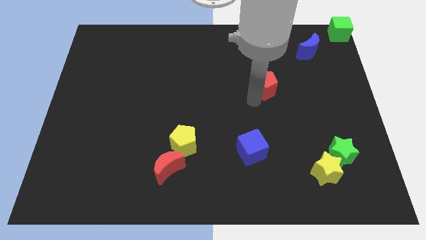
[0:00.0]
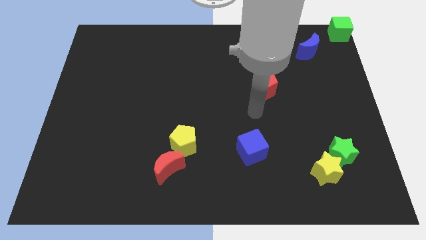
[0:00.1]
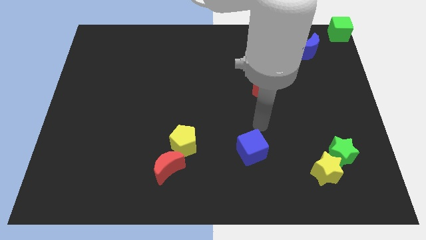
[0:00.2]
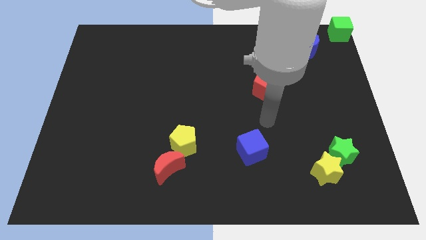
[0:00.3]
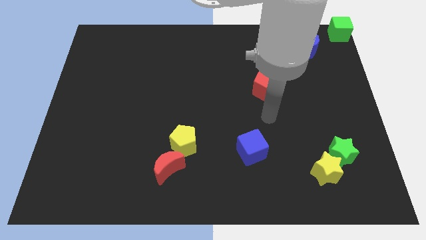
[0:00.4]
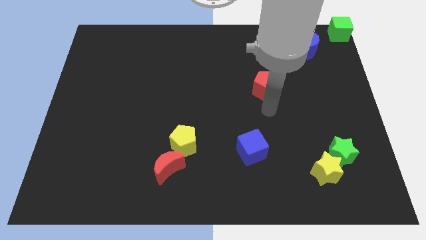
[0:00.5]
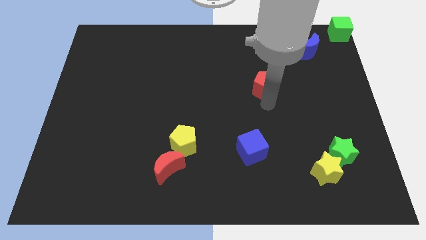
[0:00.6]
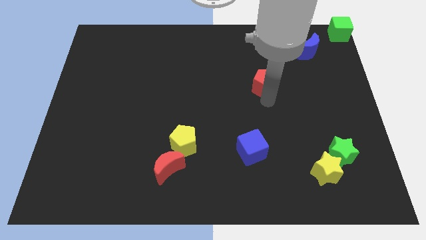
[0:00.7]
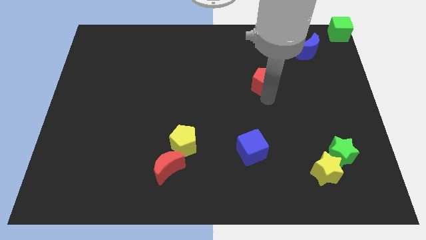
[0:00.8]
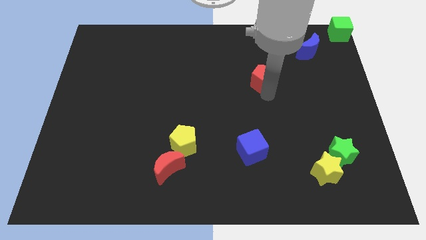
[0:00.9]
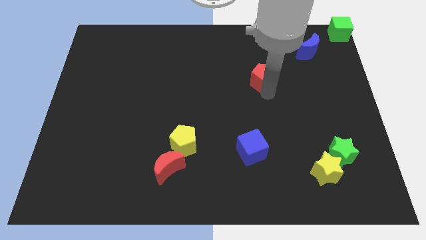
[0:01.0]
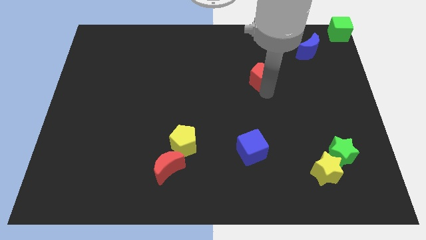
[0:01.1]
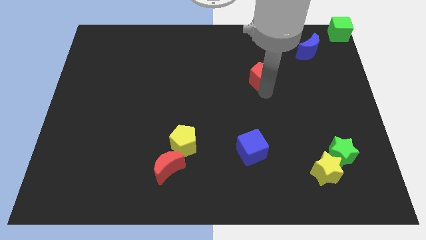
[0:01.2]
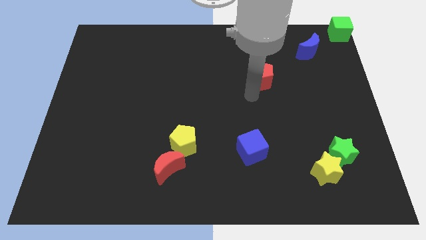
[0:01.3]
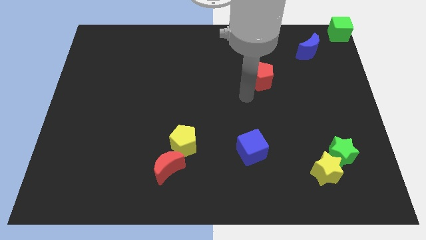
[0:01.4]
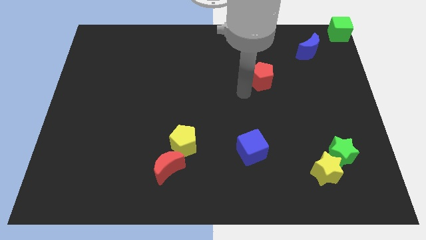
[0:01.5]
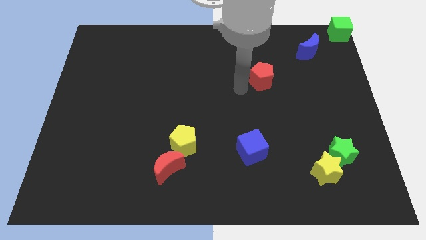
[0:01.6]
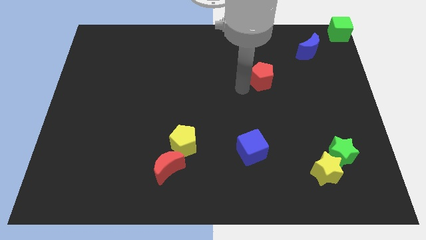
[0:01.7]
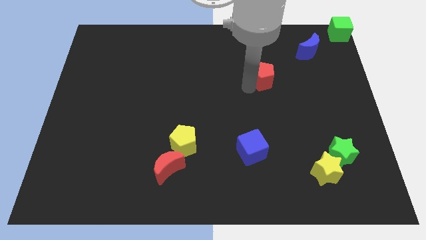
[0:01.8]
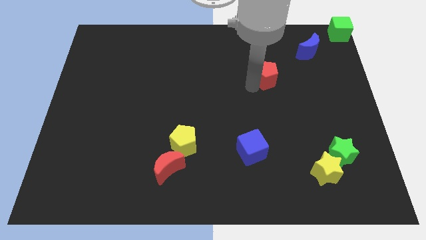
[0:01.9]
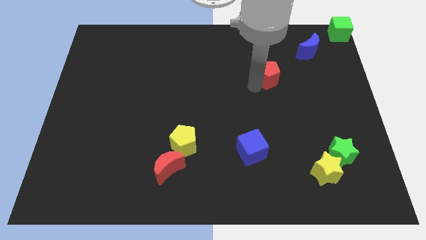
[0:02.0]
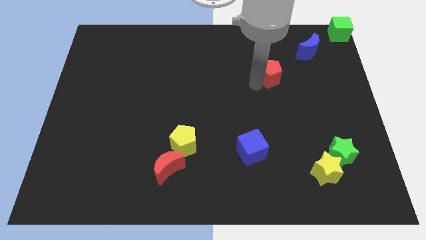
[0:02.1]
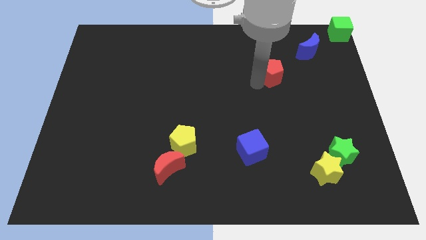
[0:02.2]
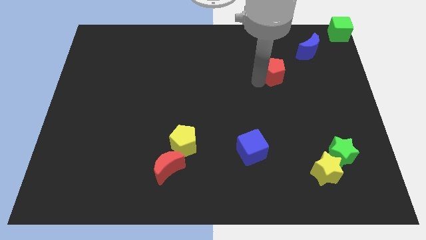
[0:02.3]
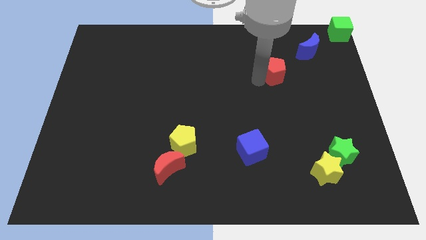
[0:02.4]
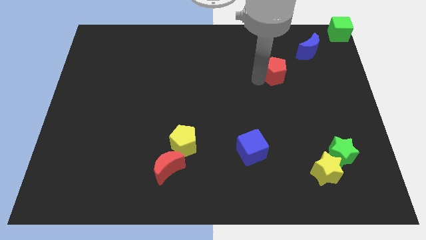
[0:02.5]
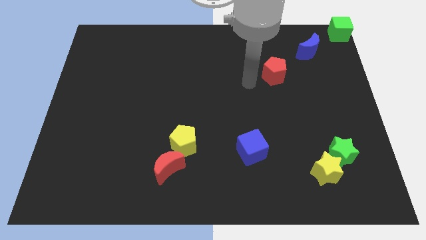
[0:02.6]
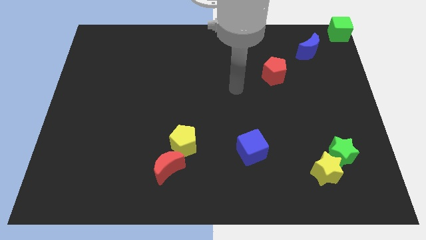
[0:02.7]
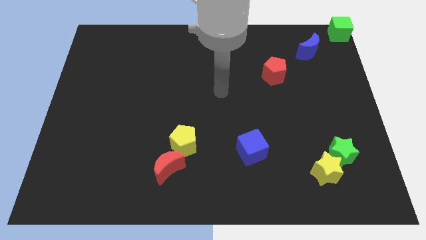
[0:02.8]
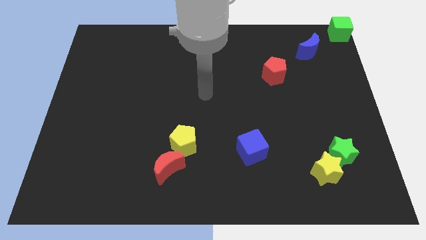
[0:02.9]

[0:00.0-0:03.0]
move the red pentagon closer to the blue moon

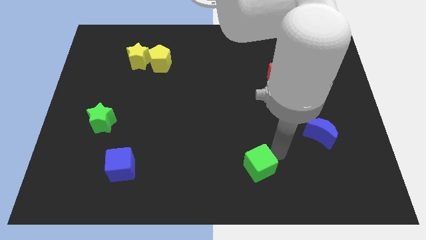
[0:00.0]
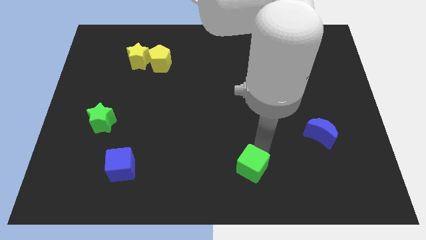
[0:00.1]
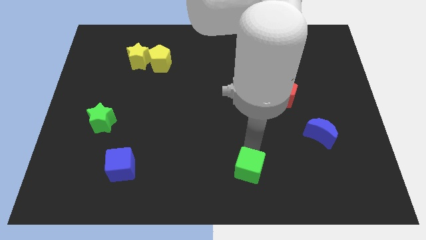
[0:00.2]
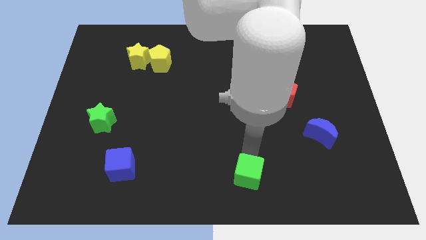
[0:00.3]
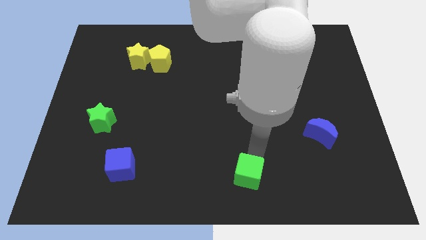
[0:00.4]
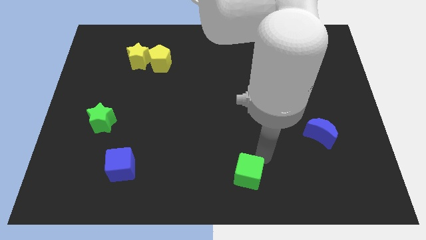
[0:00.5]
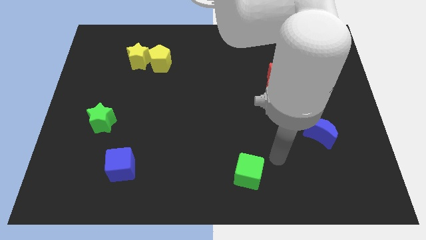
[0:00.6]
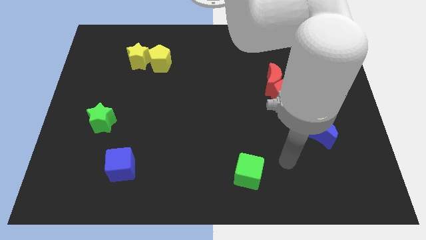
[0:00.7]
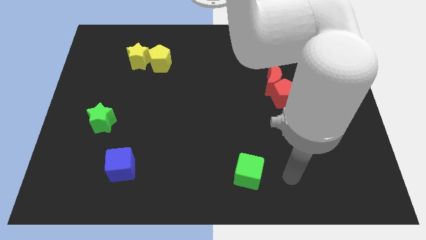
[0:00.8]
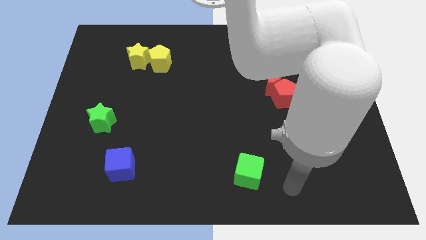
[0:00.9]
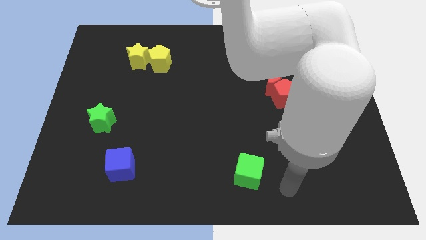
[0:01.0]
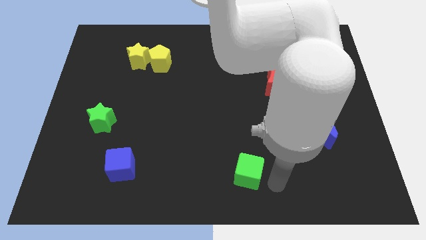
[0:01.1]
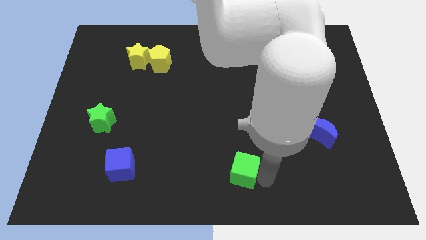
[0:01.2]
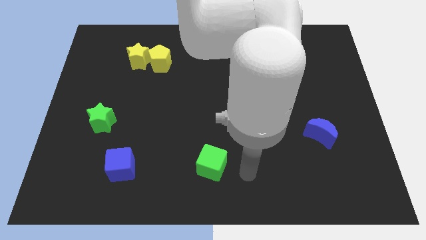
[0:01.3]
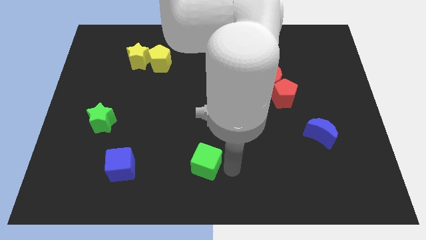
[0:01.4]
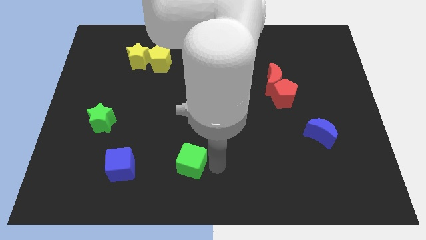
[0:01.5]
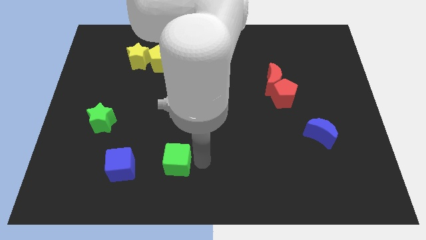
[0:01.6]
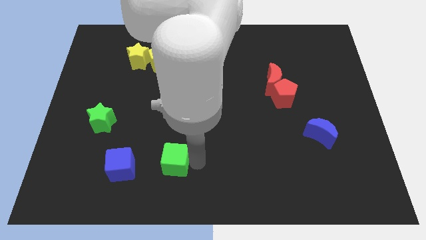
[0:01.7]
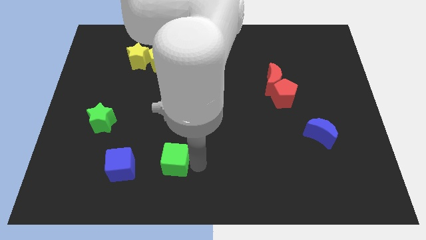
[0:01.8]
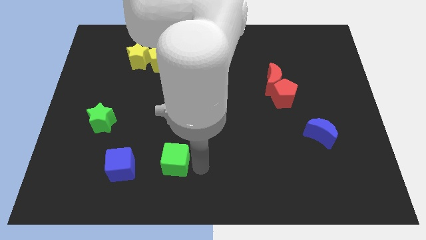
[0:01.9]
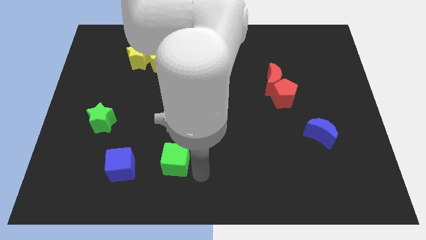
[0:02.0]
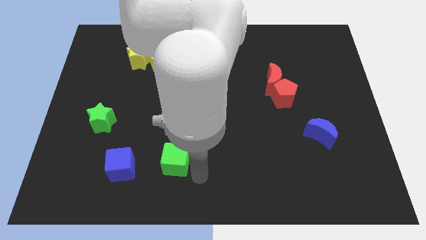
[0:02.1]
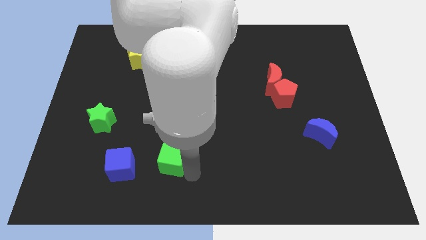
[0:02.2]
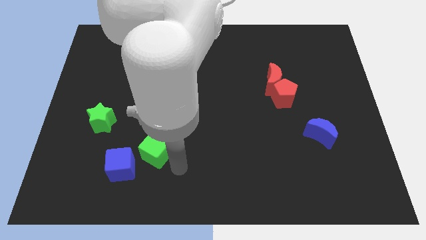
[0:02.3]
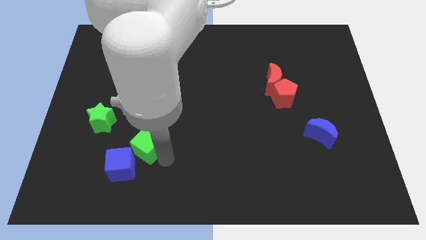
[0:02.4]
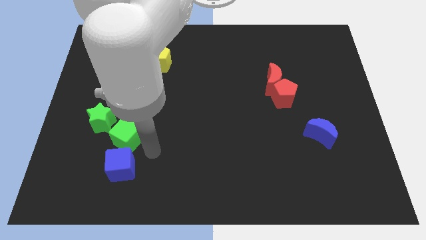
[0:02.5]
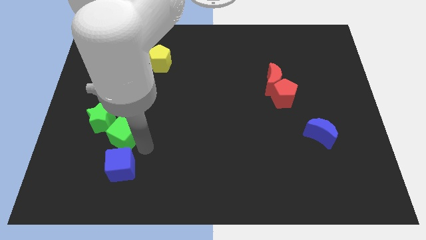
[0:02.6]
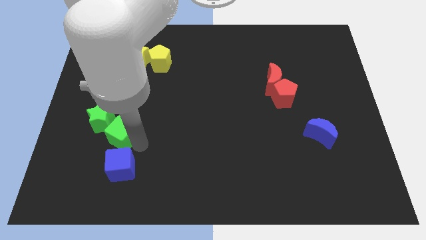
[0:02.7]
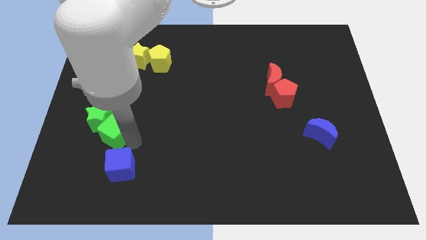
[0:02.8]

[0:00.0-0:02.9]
place the green cube above the blue cube

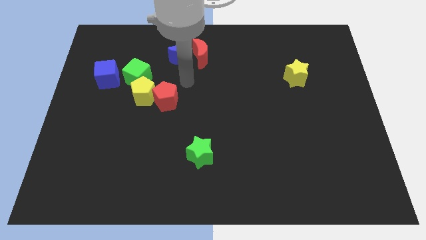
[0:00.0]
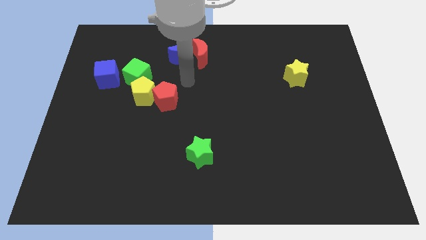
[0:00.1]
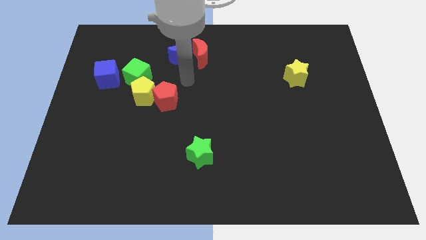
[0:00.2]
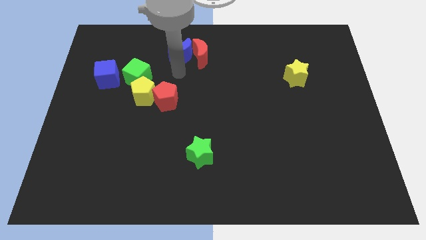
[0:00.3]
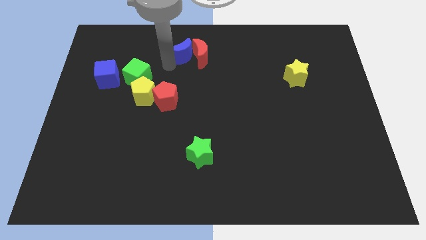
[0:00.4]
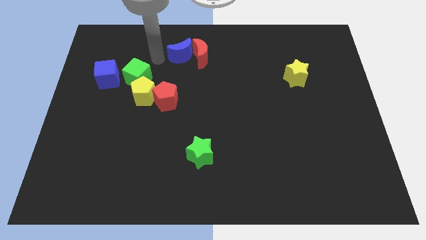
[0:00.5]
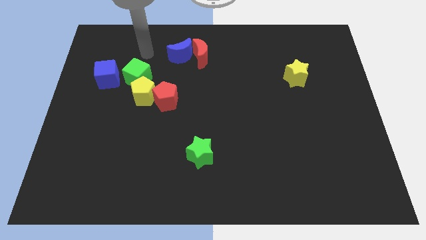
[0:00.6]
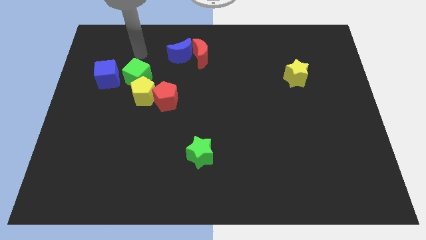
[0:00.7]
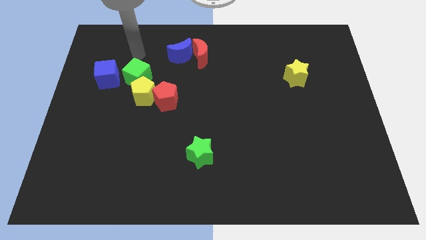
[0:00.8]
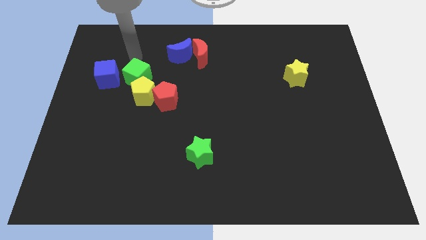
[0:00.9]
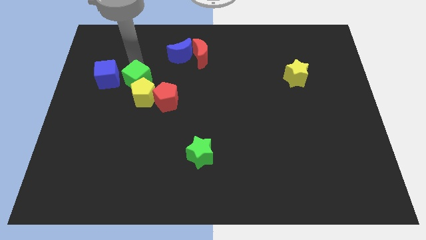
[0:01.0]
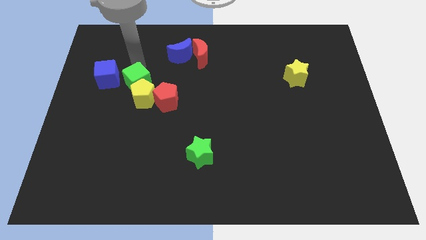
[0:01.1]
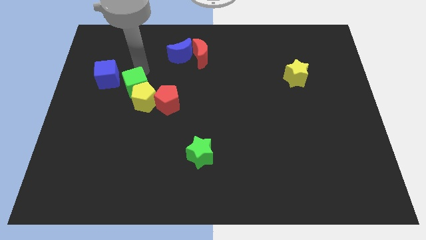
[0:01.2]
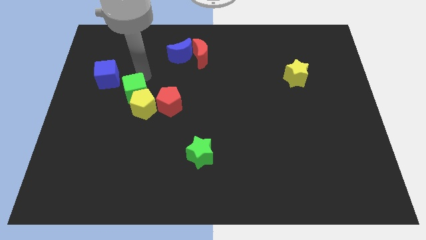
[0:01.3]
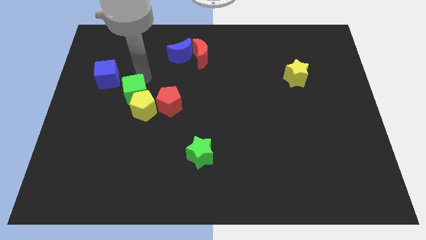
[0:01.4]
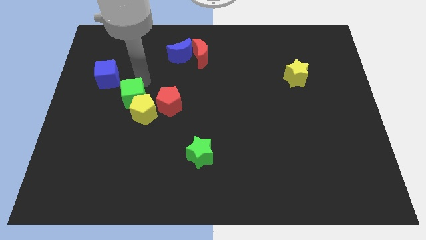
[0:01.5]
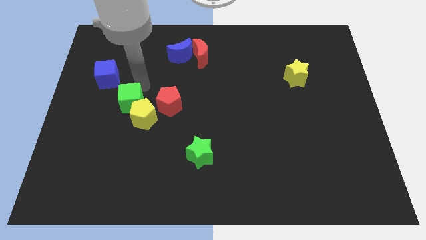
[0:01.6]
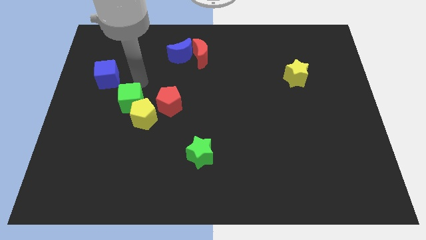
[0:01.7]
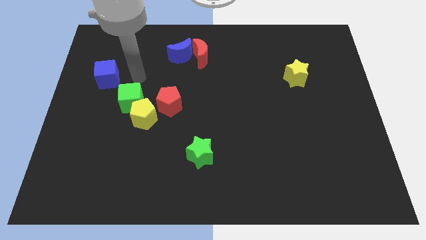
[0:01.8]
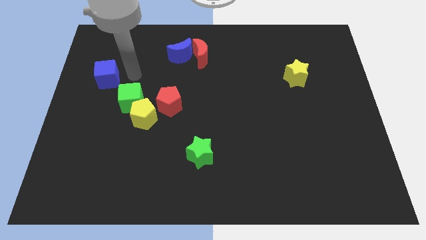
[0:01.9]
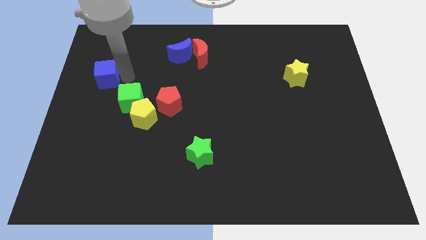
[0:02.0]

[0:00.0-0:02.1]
slightly move the green cube at the bottom

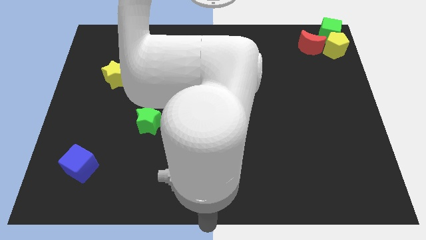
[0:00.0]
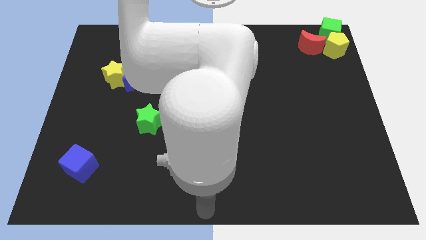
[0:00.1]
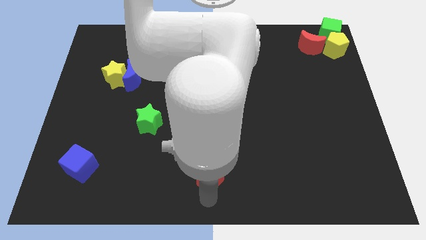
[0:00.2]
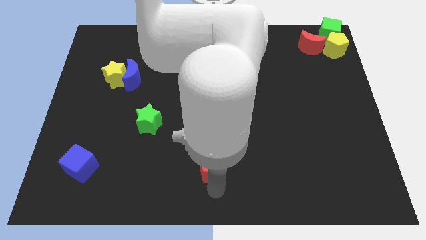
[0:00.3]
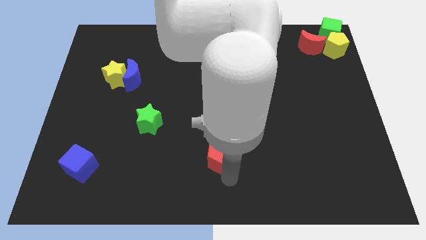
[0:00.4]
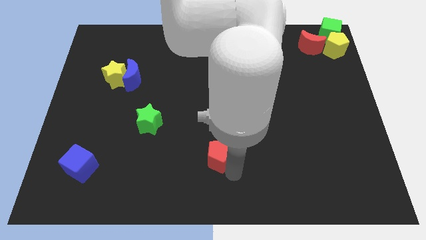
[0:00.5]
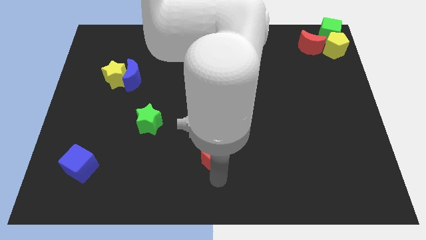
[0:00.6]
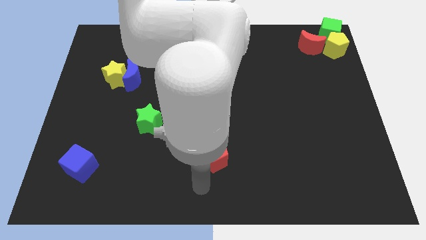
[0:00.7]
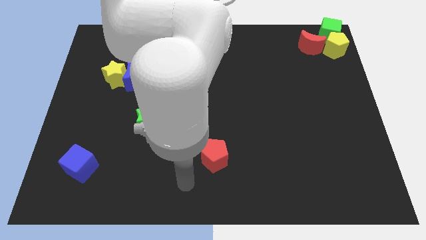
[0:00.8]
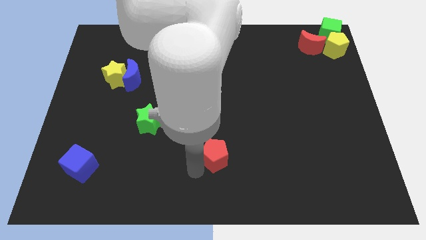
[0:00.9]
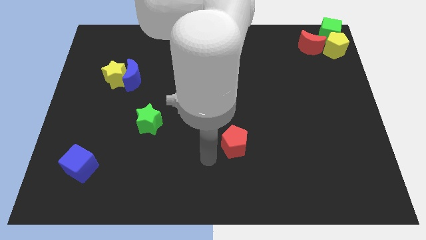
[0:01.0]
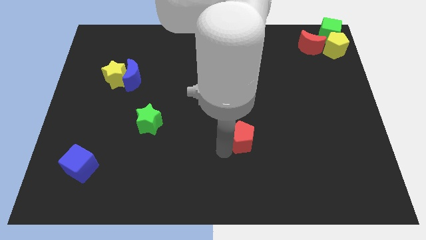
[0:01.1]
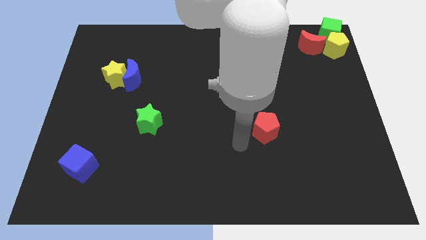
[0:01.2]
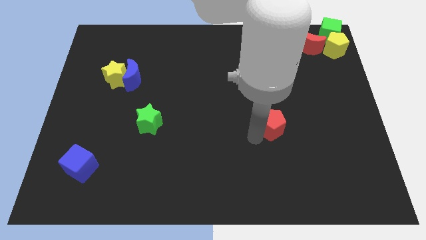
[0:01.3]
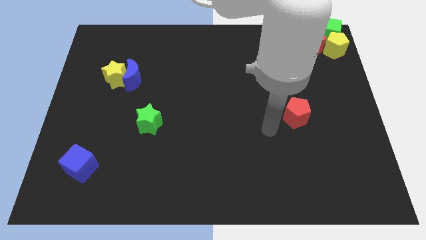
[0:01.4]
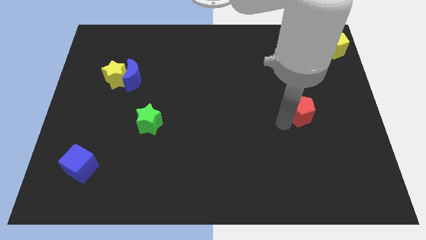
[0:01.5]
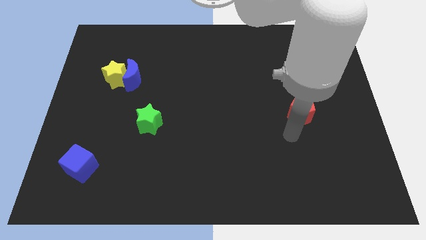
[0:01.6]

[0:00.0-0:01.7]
push the red pentagon towards the group of blocks
